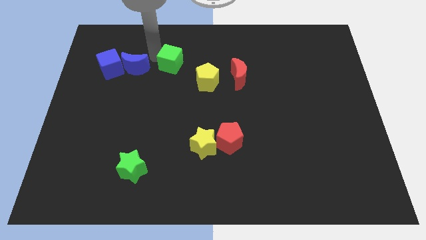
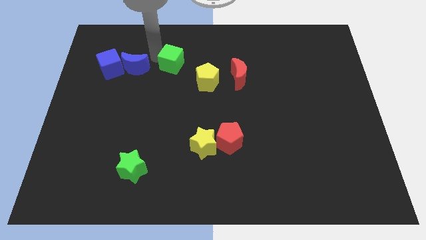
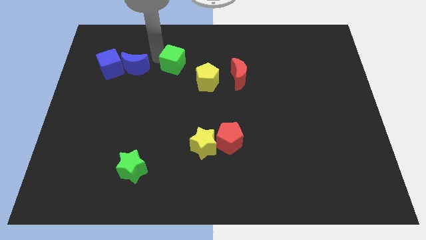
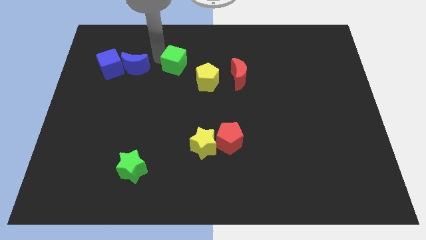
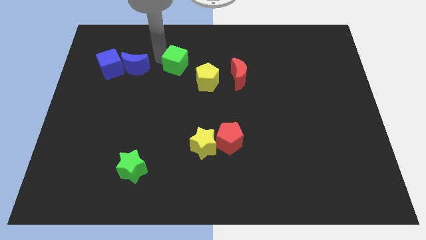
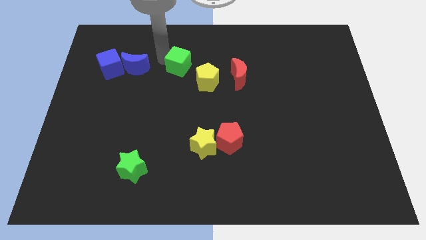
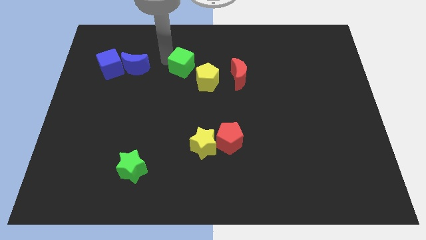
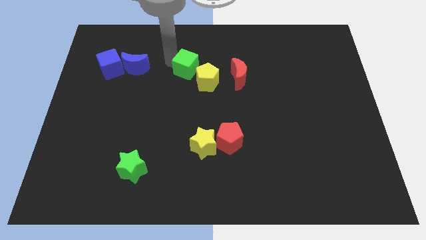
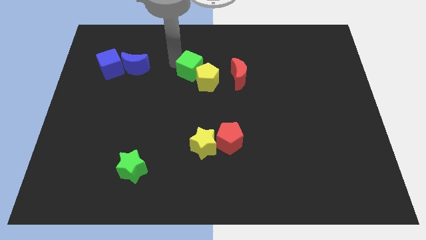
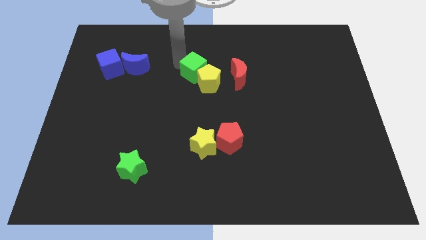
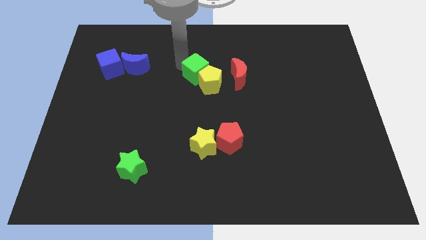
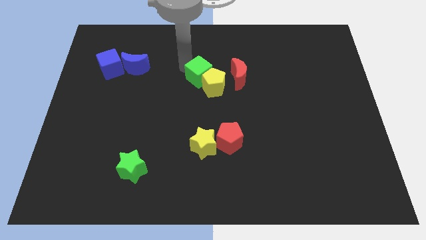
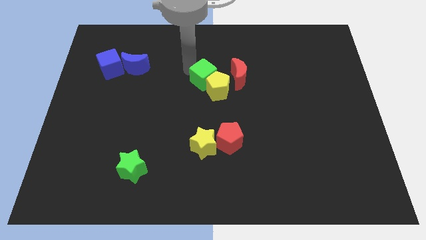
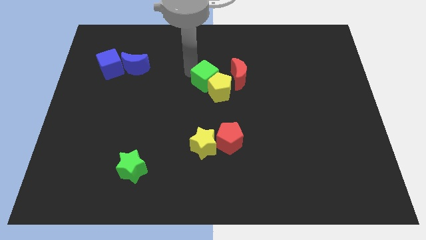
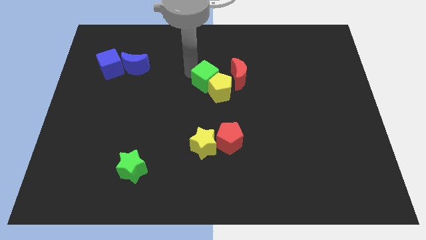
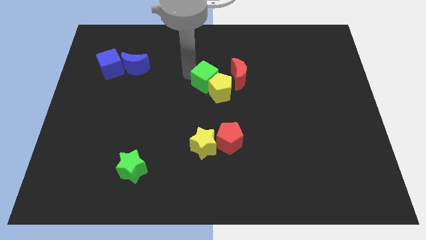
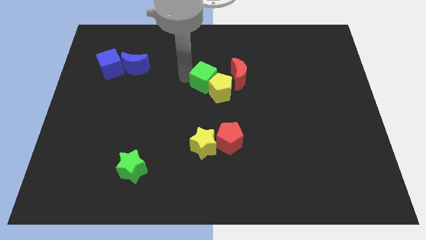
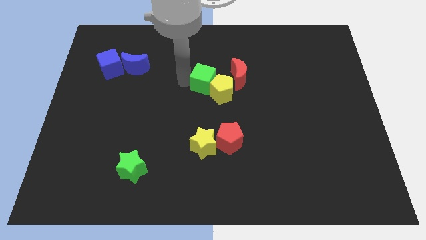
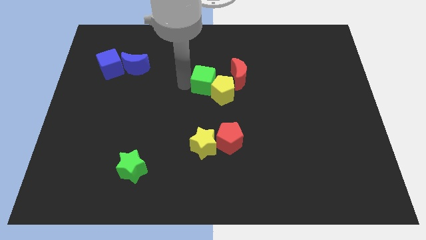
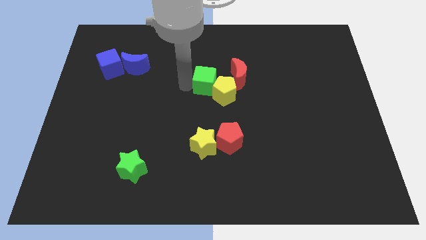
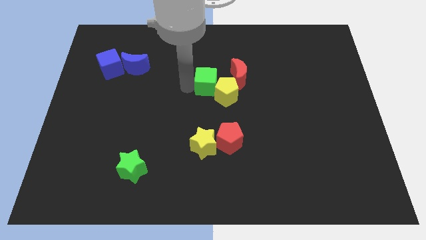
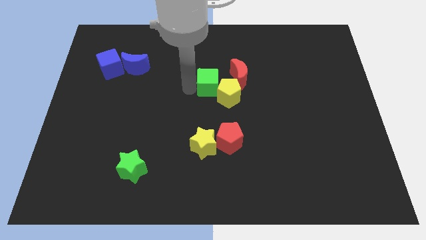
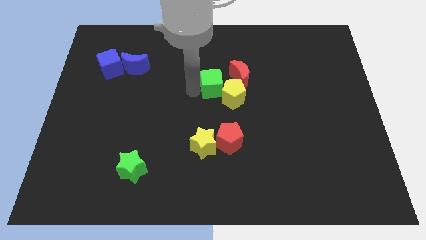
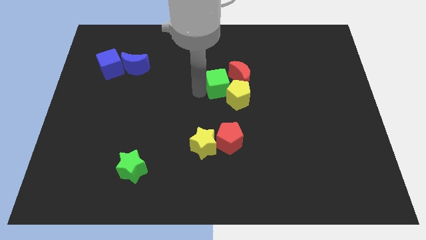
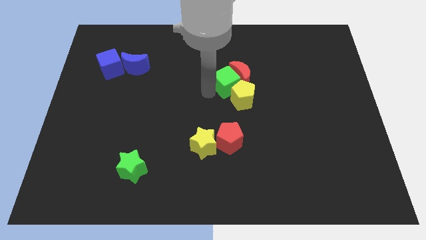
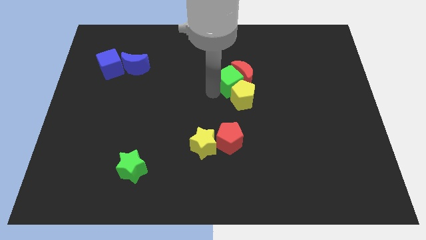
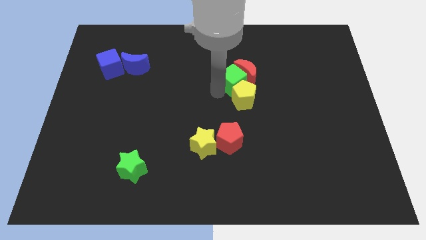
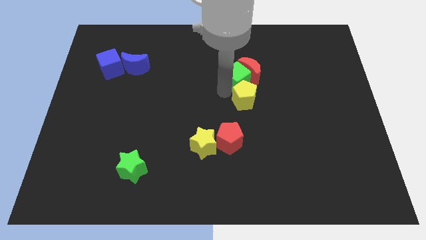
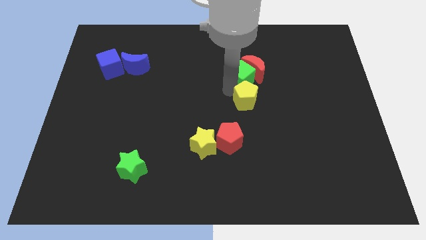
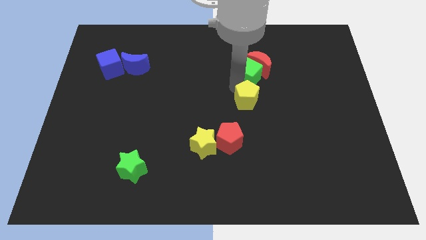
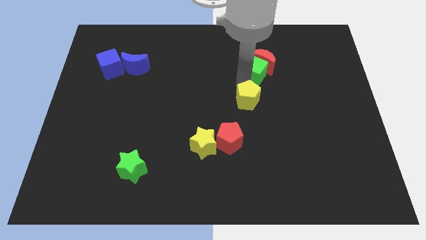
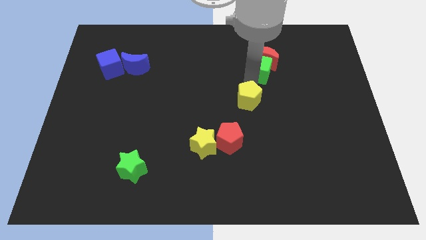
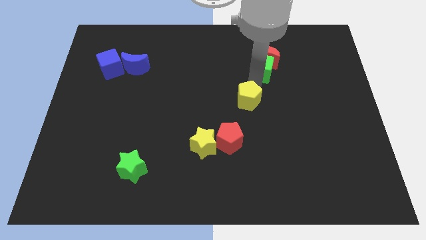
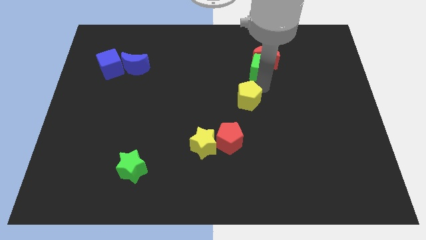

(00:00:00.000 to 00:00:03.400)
push the green cube into the red moon

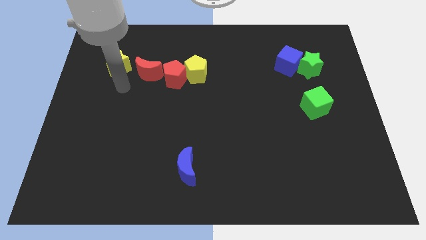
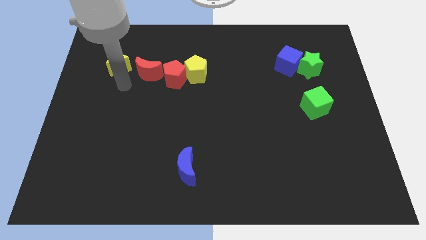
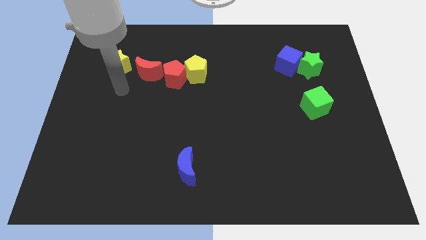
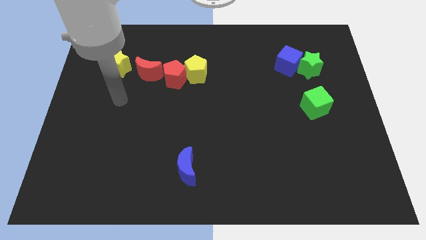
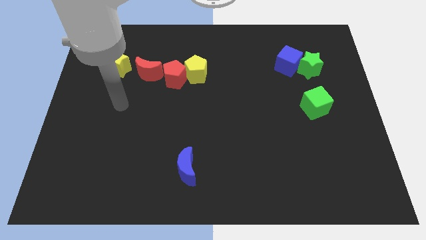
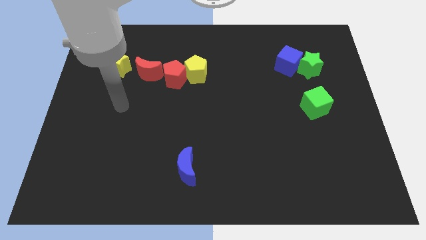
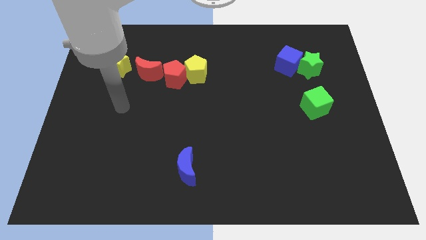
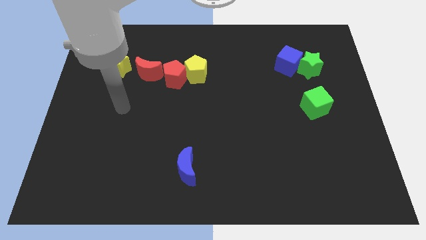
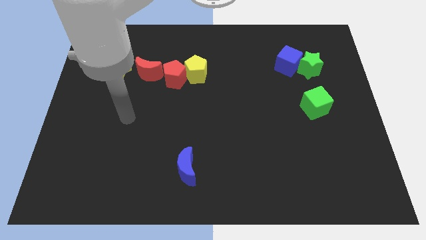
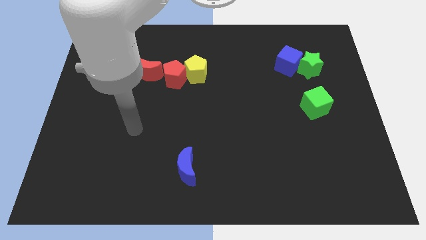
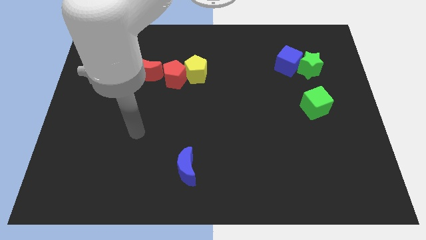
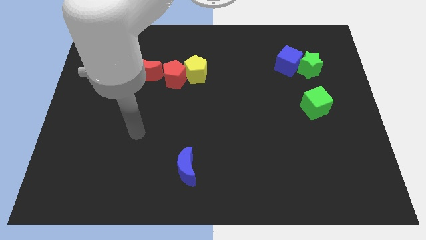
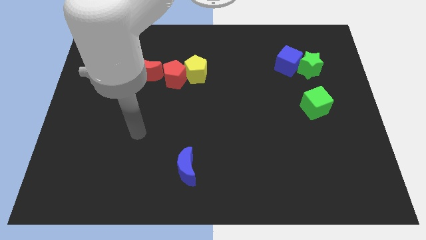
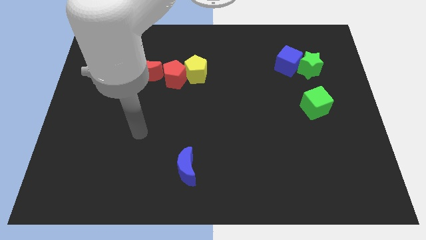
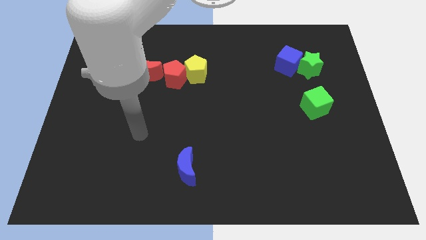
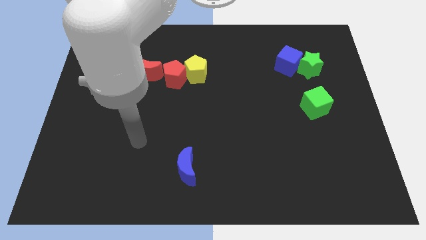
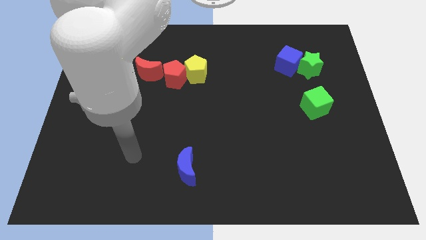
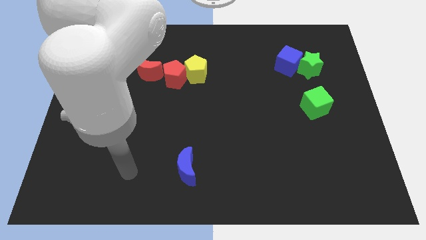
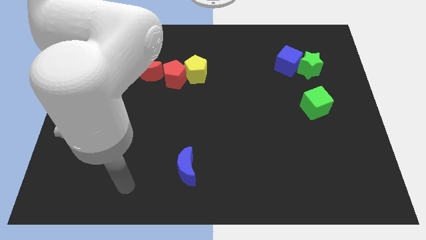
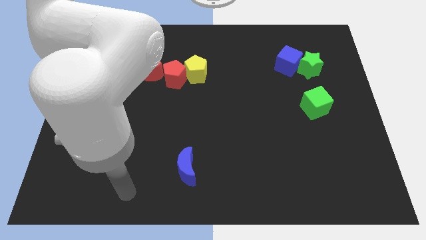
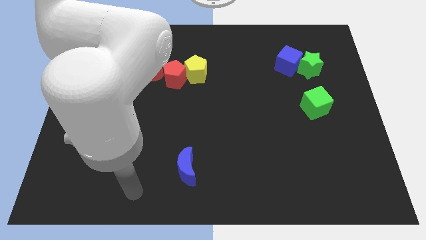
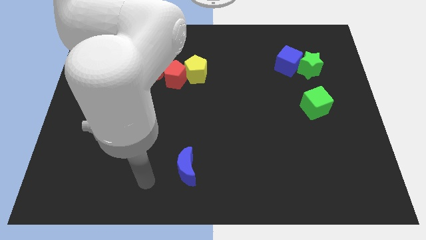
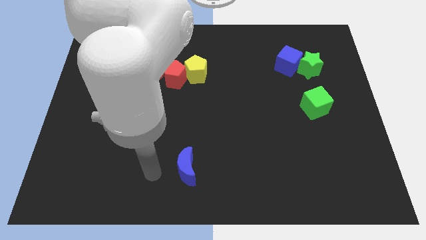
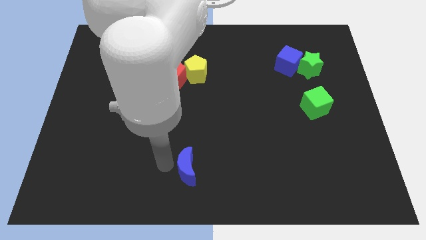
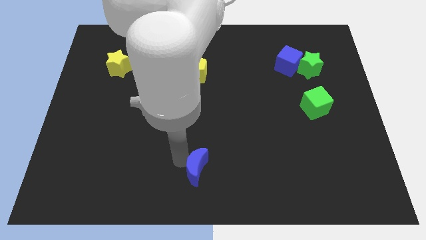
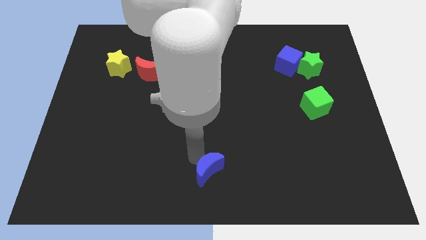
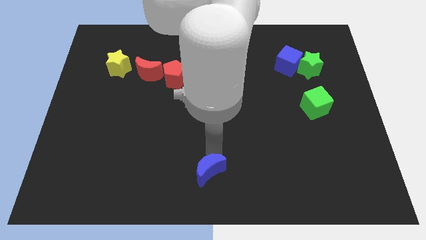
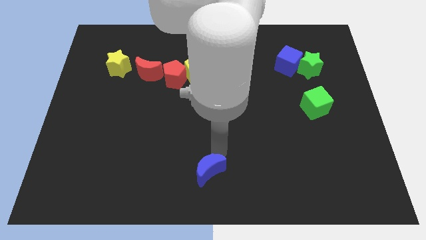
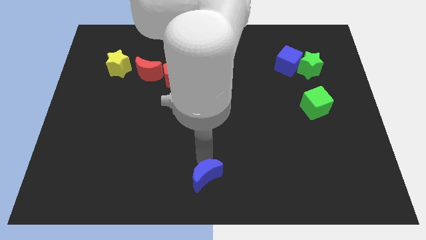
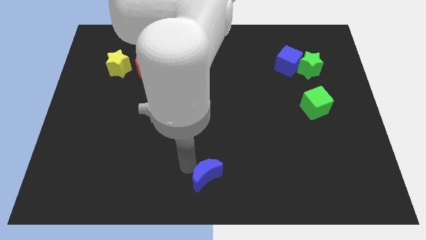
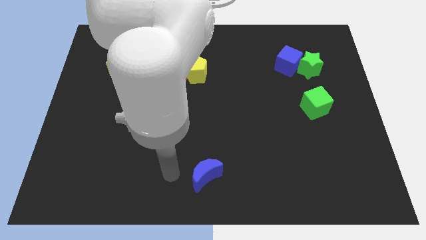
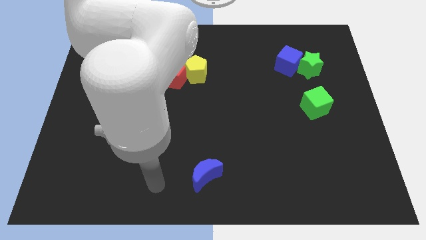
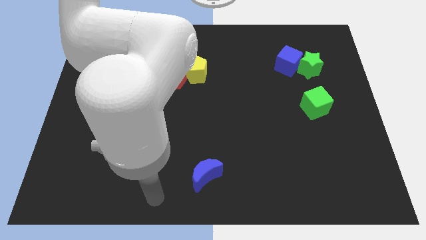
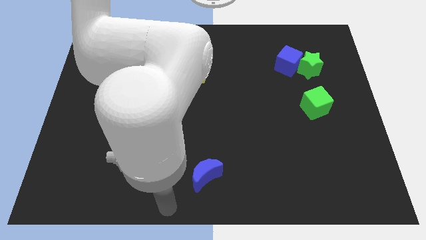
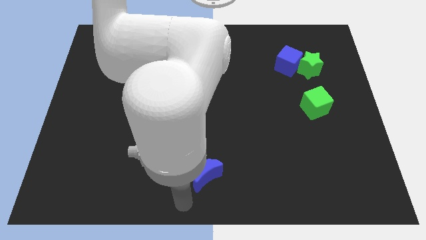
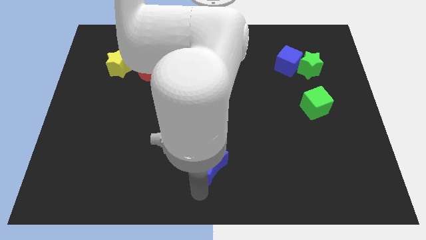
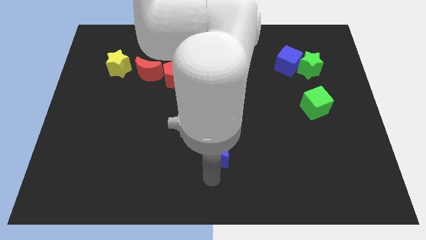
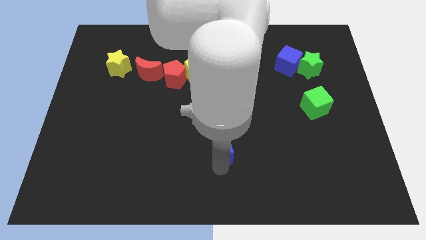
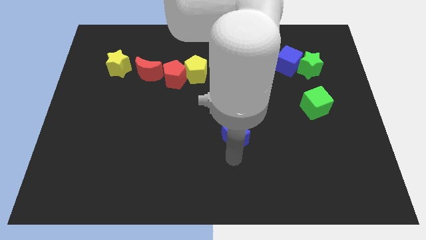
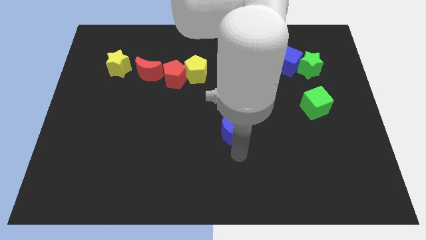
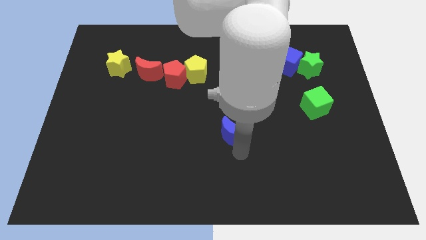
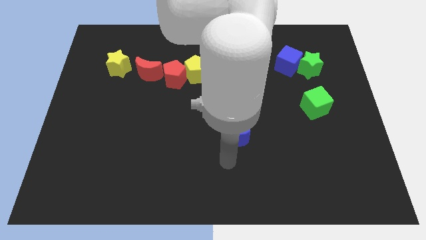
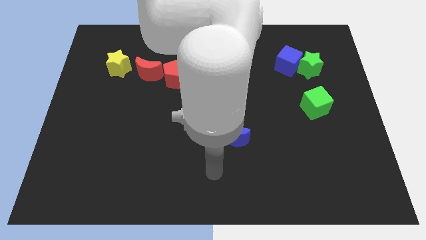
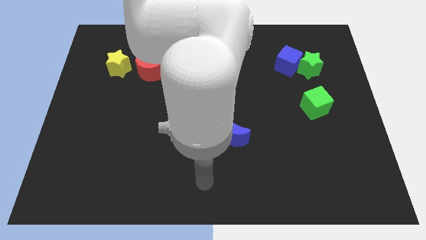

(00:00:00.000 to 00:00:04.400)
slide the blue crescent diagonally bottom right to the yellow pentagon

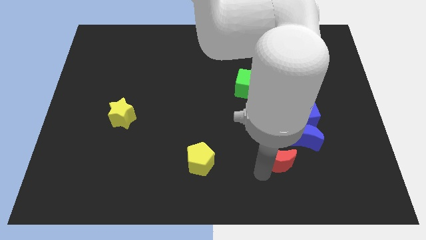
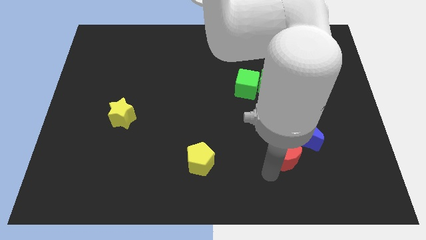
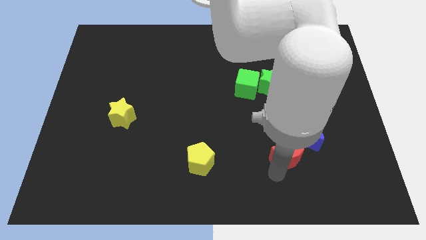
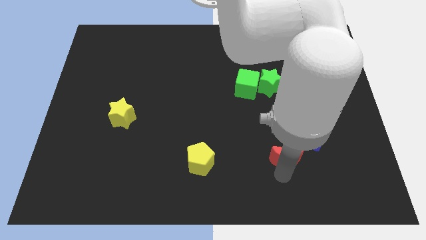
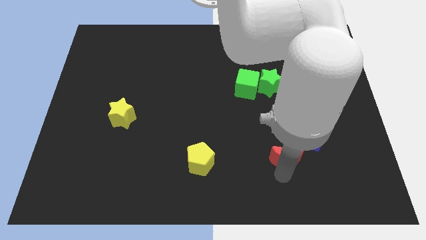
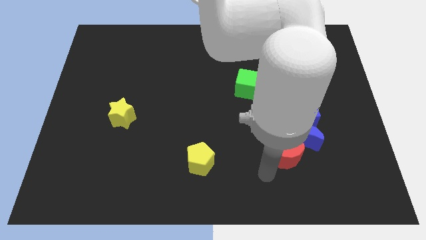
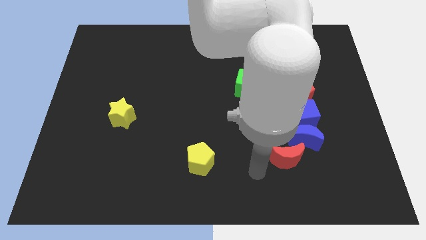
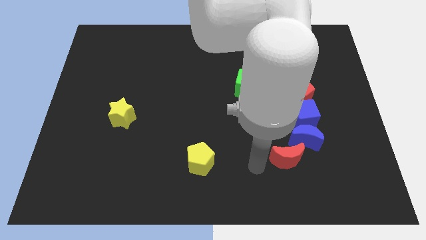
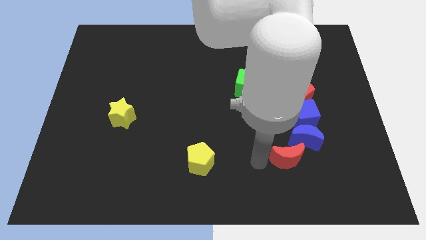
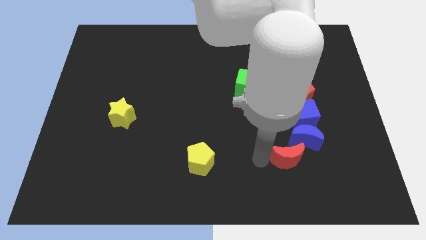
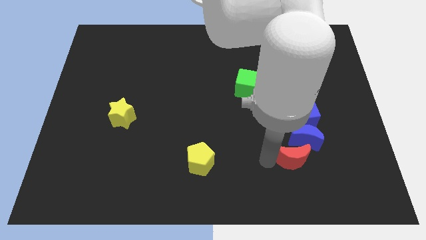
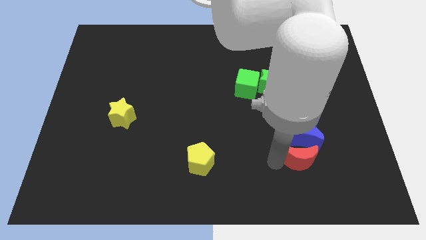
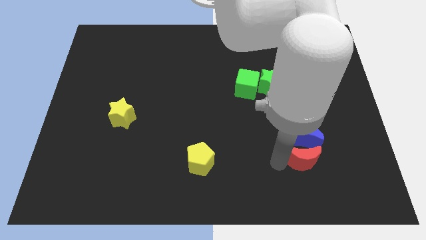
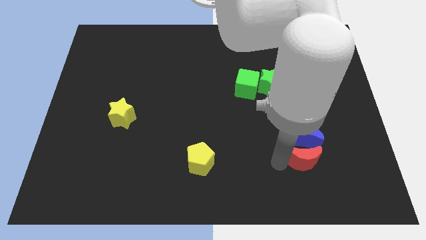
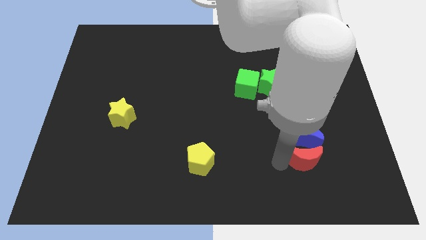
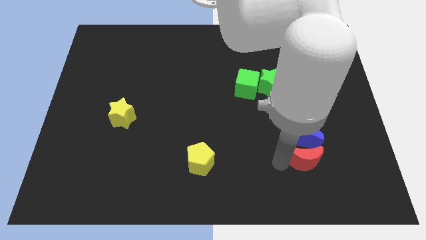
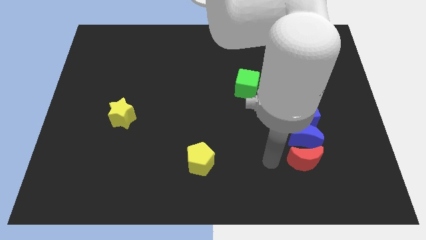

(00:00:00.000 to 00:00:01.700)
move the red crescent to the bottom of the blue crescent
